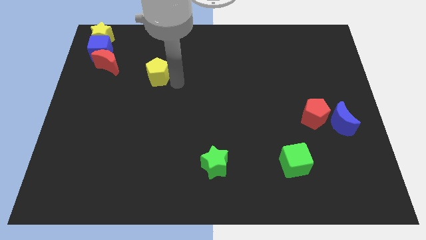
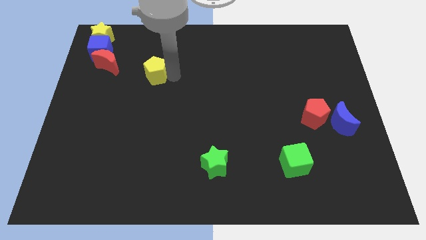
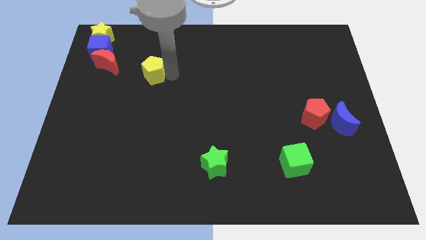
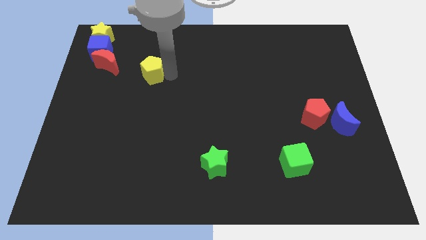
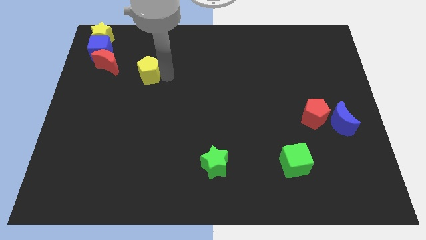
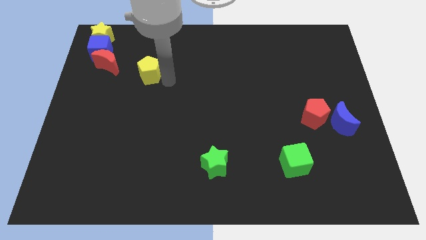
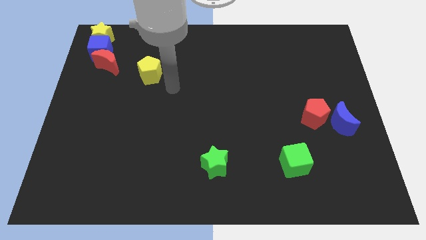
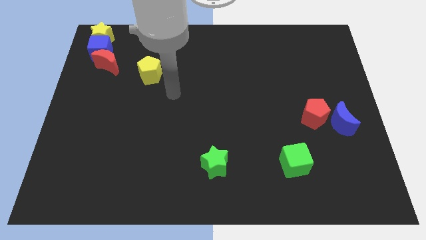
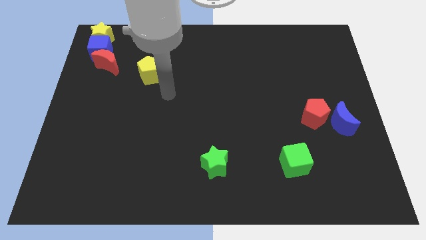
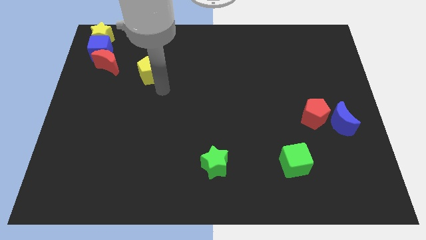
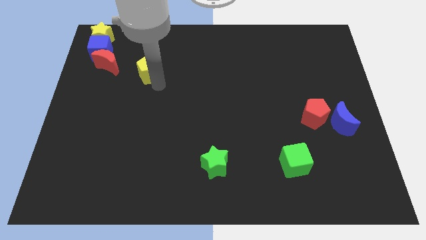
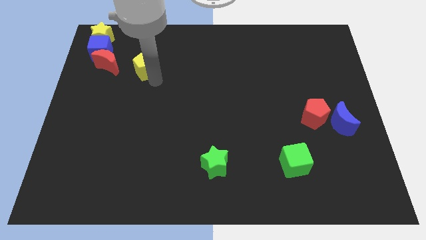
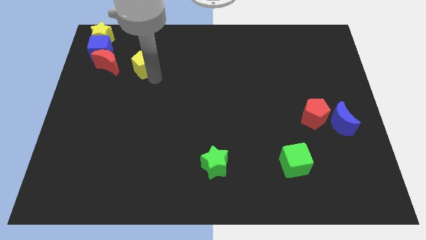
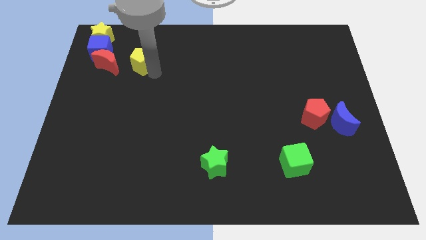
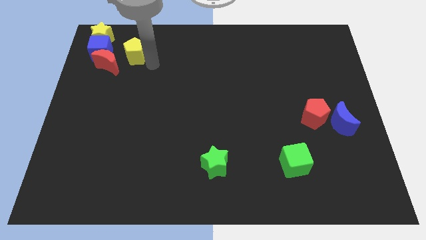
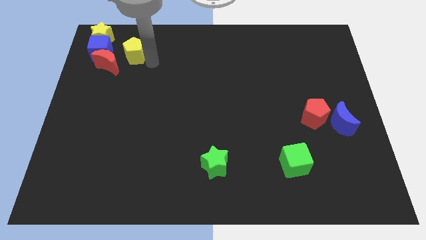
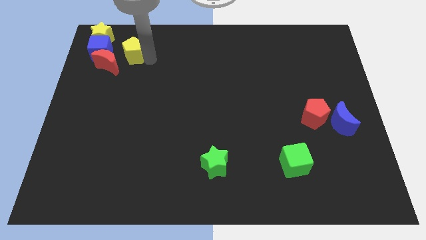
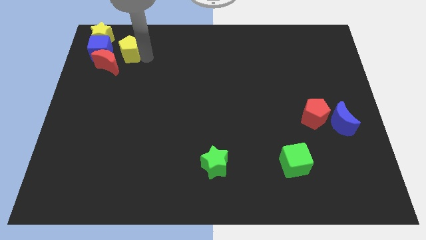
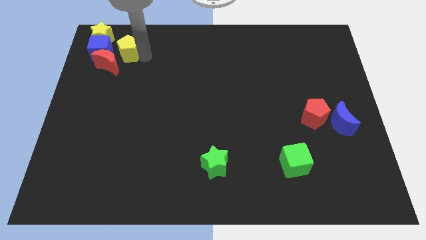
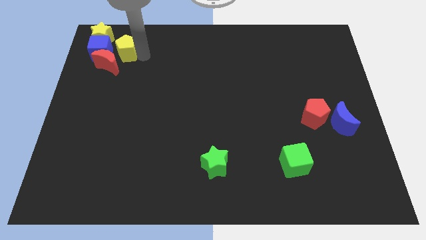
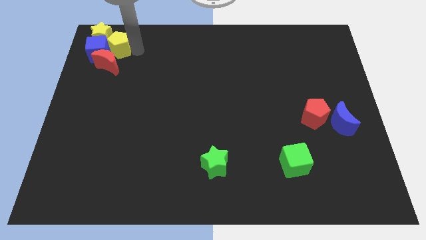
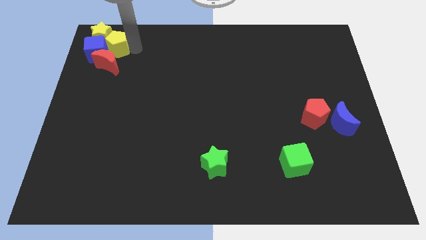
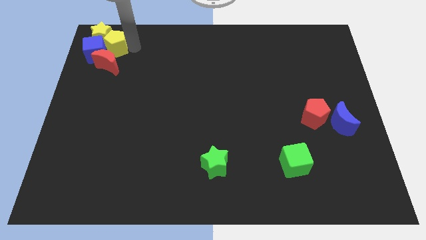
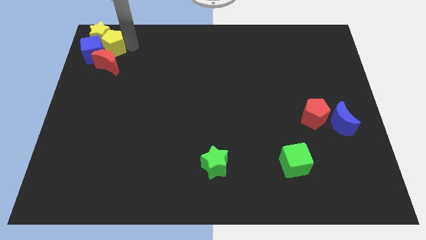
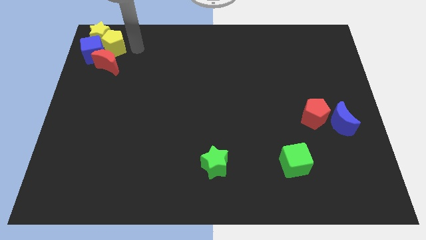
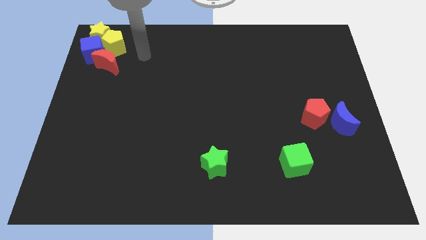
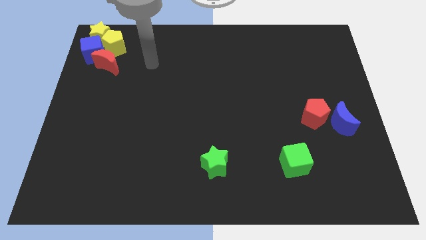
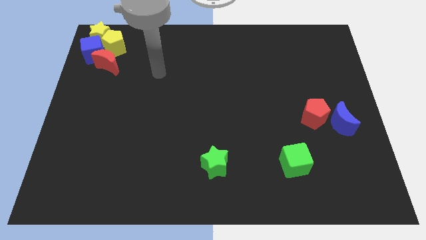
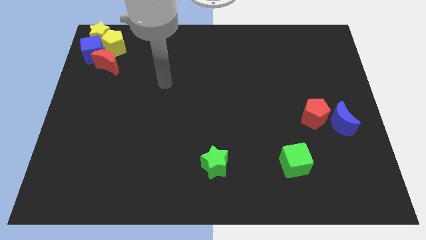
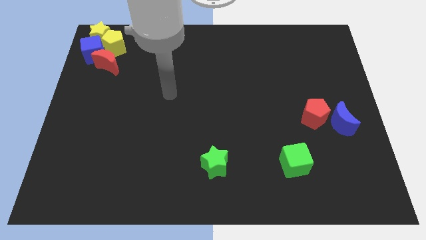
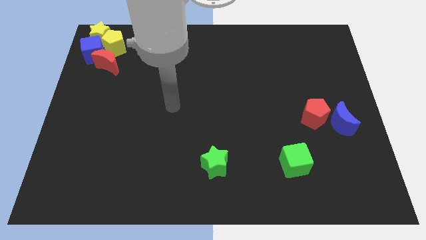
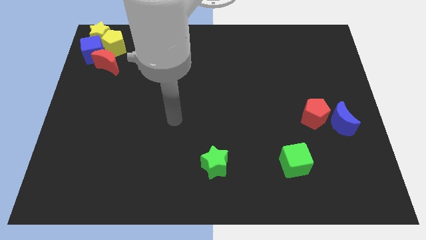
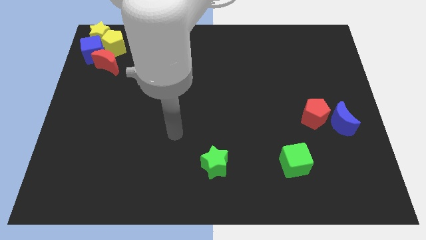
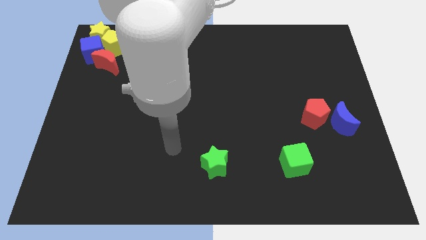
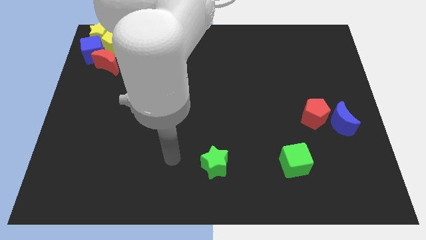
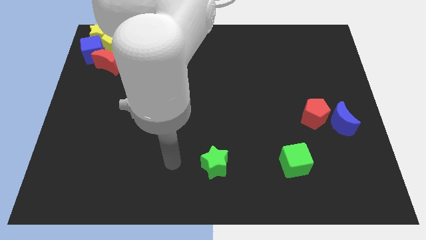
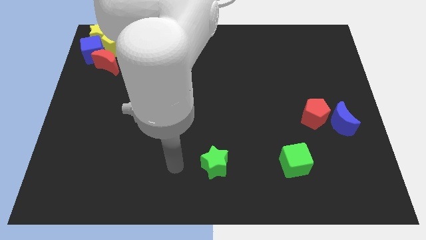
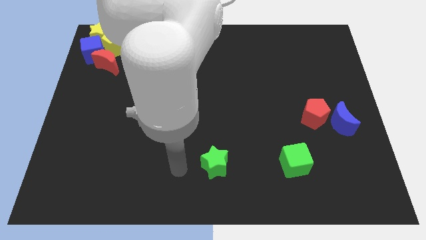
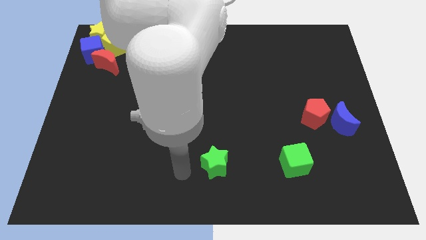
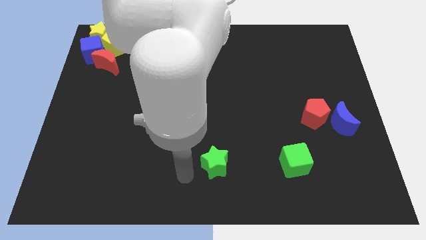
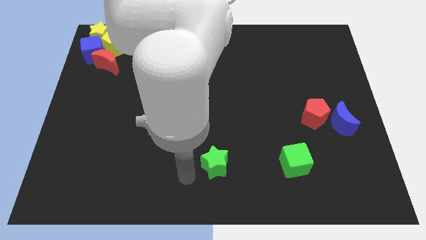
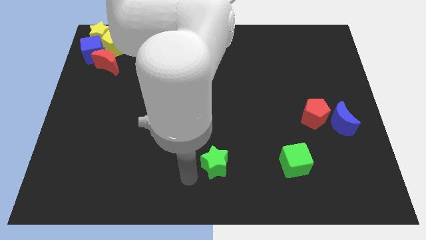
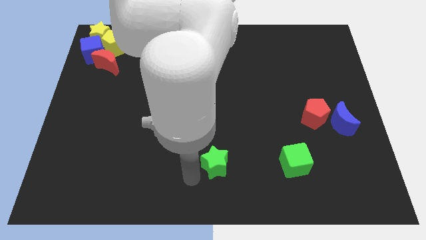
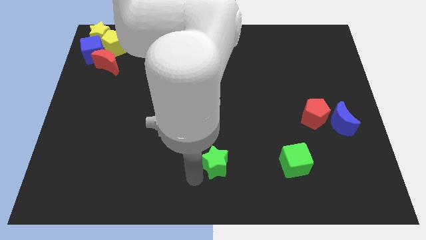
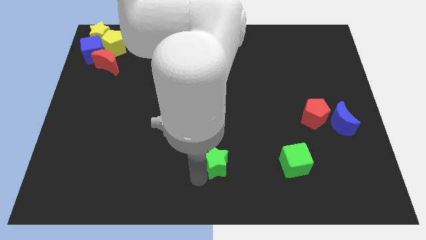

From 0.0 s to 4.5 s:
push the yellow pentagon to the group of block

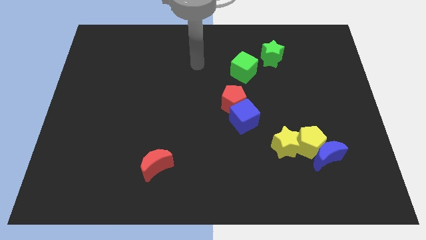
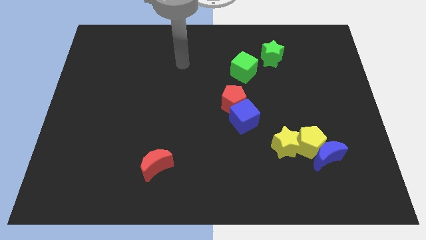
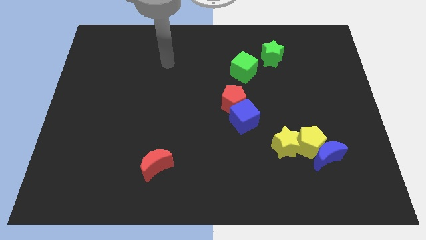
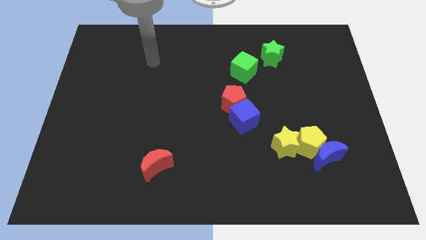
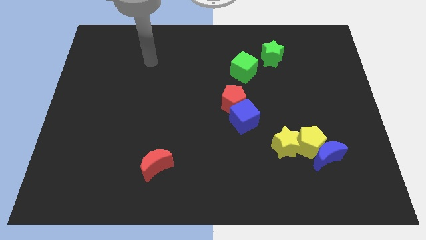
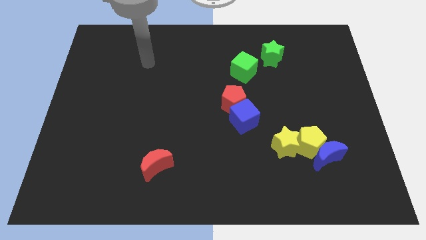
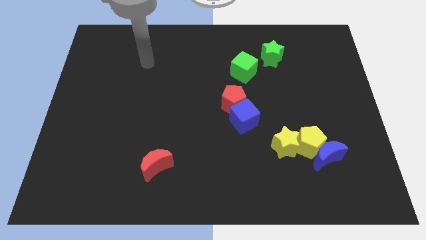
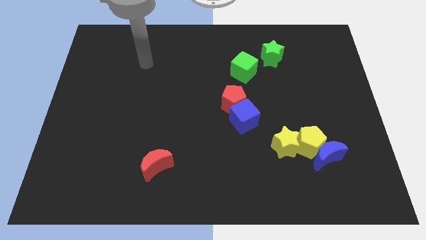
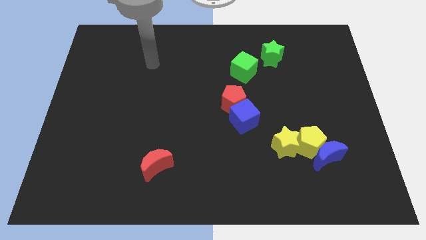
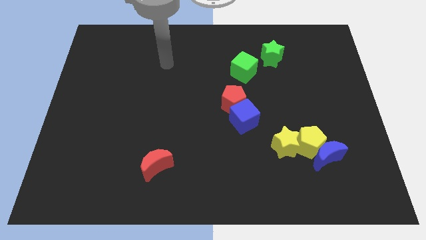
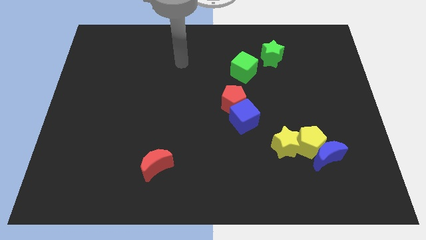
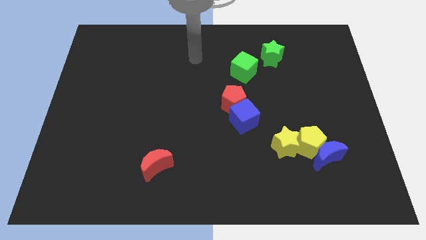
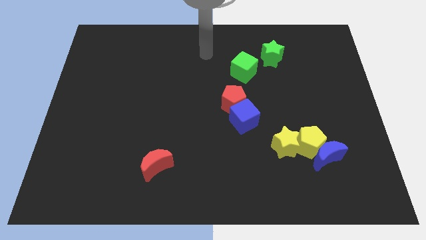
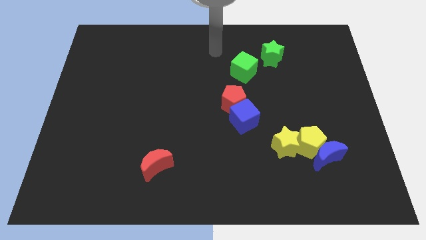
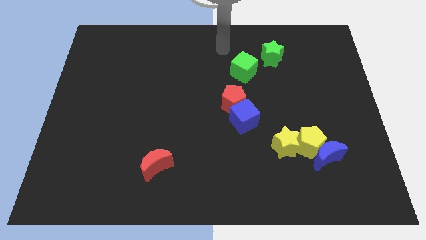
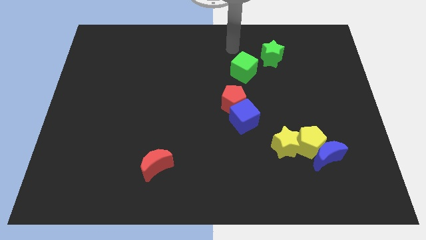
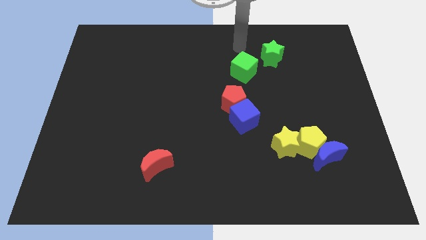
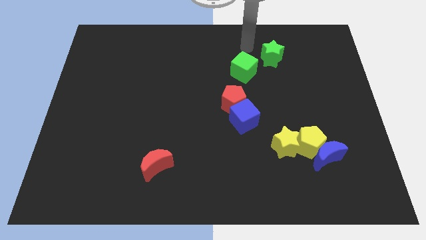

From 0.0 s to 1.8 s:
point your arm at the top of the green cube

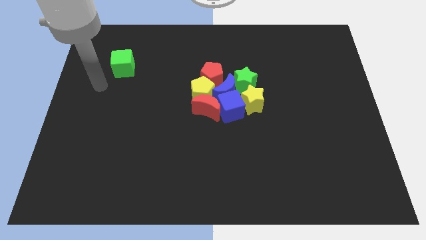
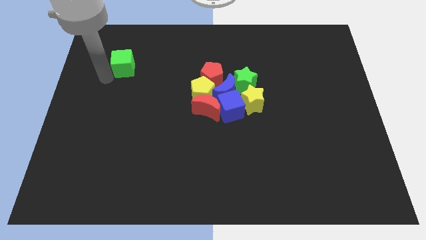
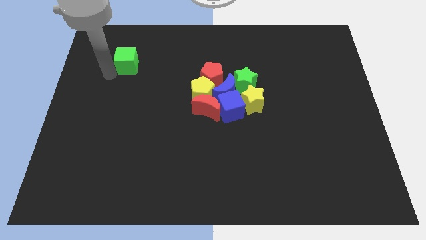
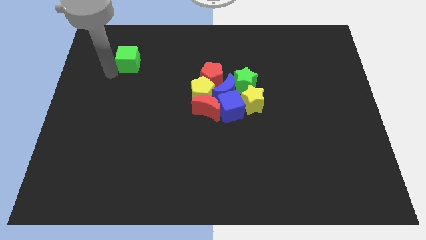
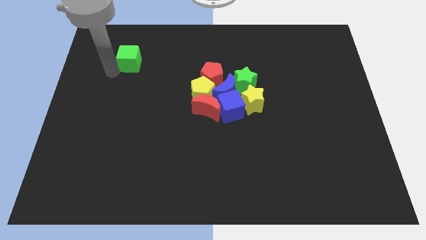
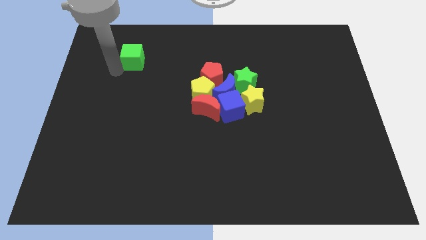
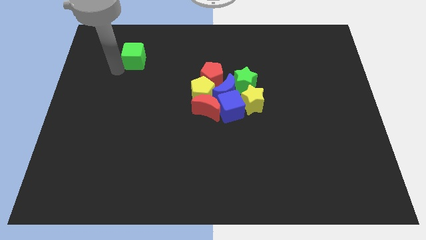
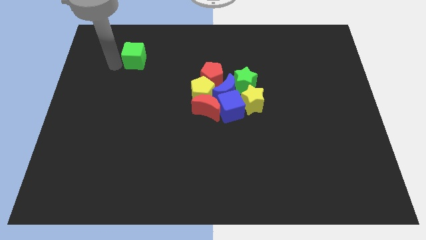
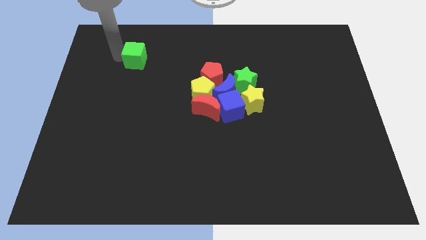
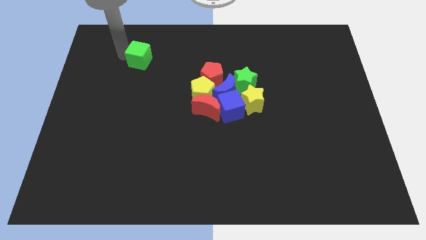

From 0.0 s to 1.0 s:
move the green cube to the top of the board

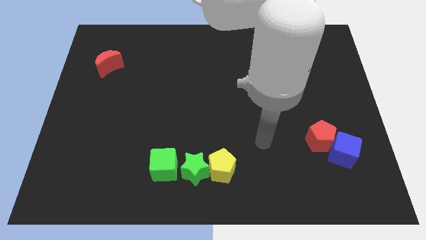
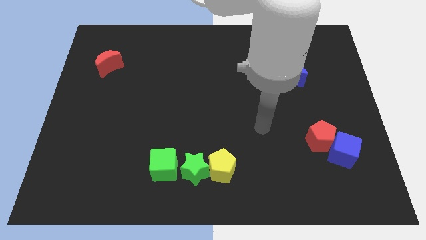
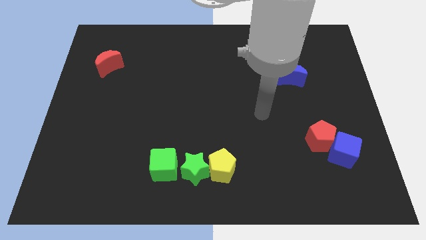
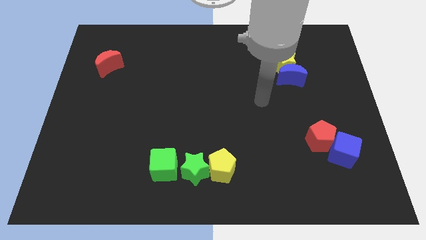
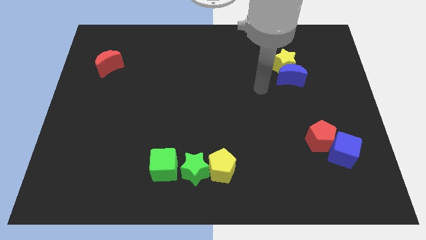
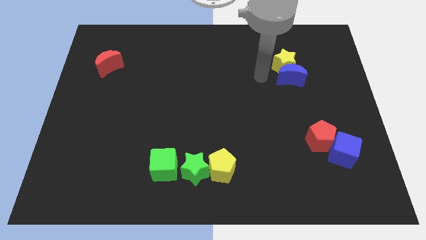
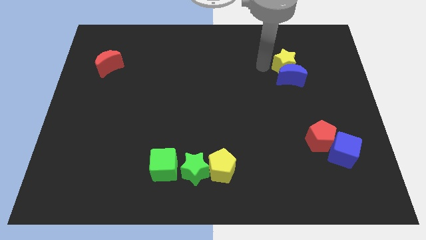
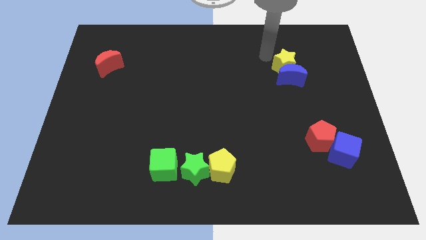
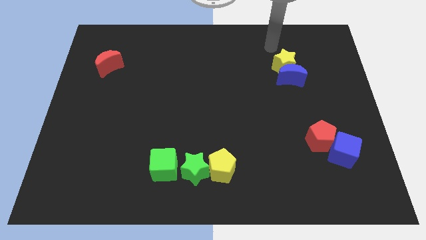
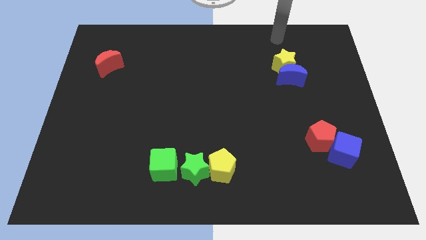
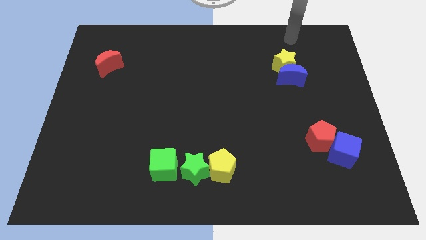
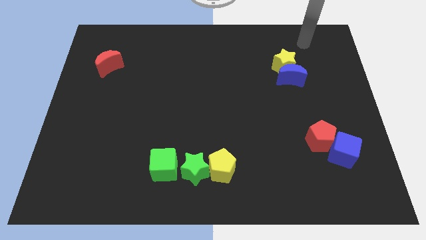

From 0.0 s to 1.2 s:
point your hand at the top right side of the yellow star

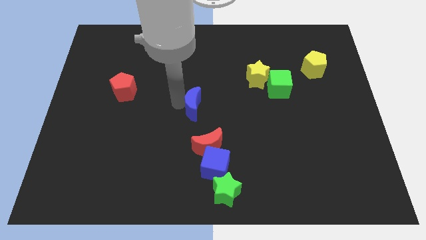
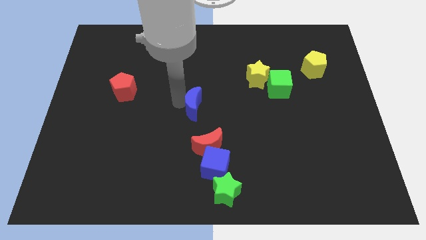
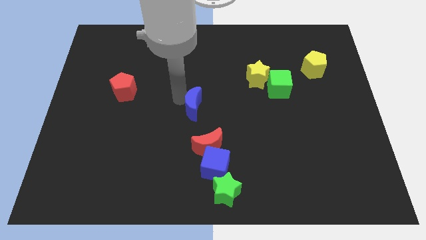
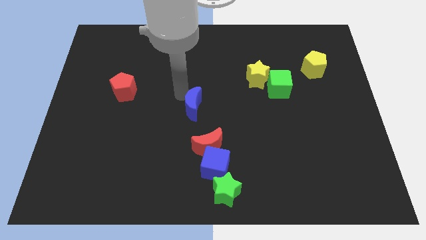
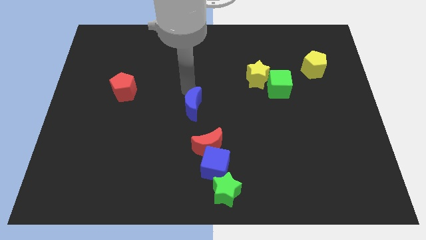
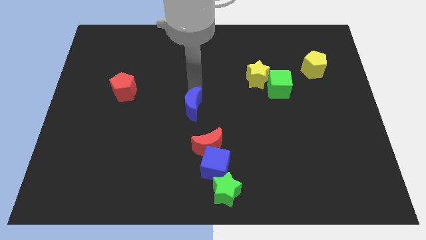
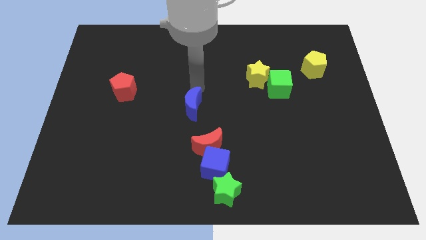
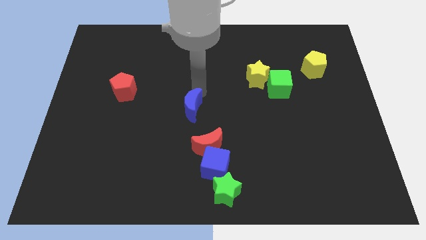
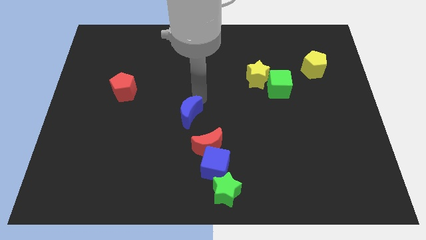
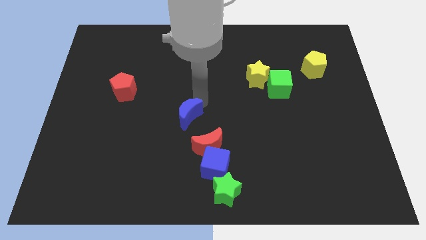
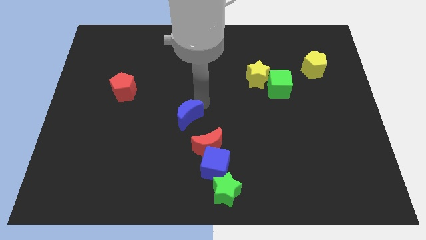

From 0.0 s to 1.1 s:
push the blue crescent towards the red crescent
